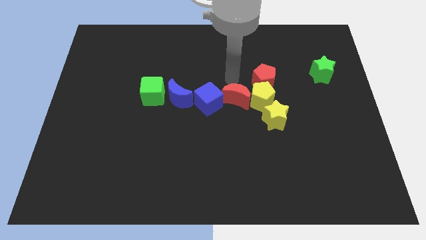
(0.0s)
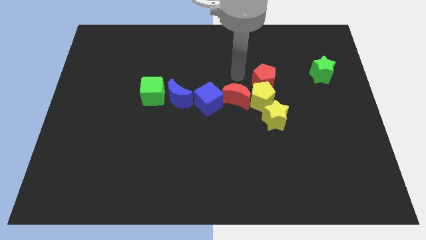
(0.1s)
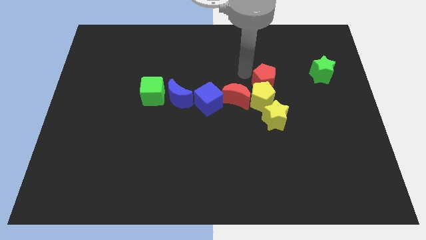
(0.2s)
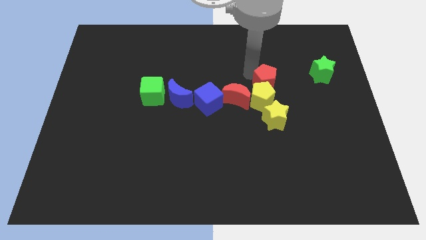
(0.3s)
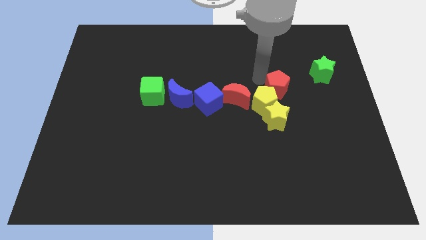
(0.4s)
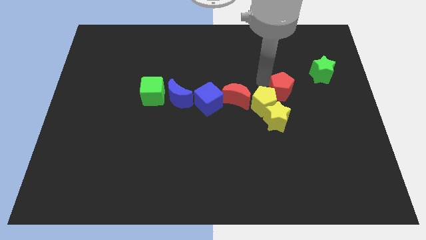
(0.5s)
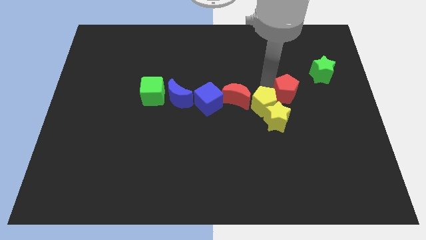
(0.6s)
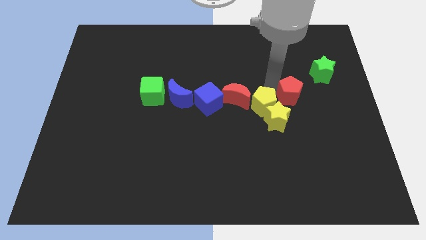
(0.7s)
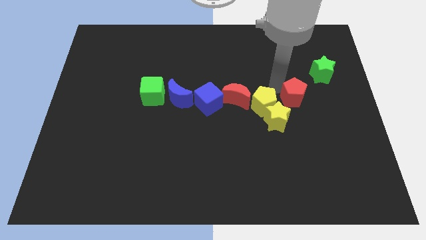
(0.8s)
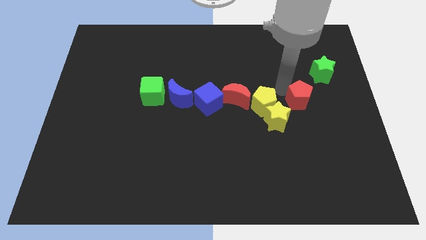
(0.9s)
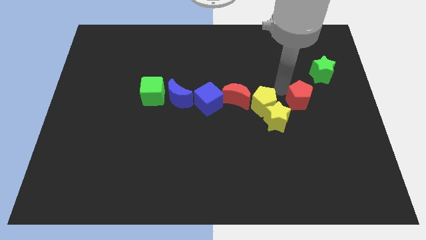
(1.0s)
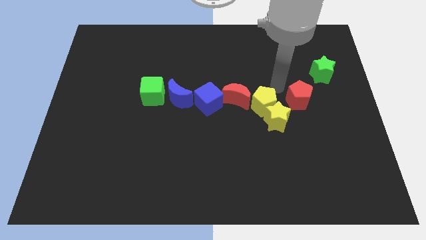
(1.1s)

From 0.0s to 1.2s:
place the red pentagon in between the green star and yellow star

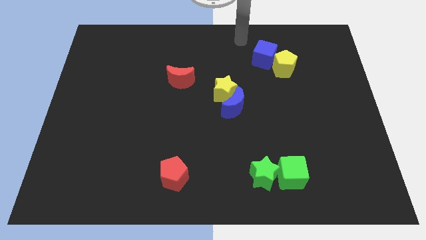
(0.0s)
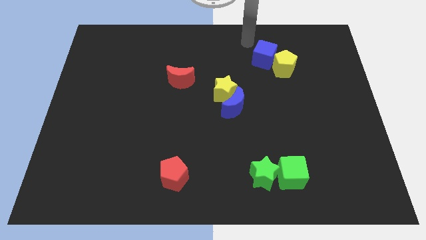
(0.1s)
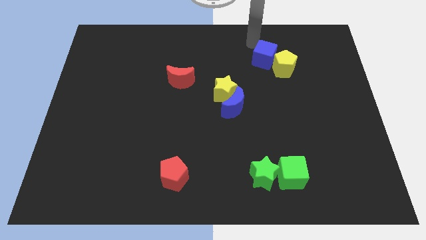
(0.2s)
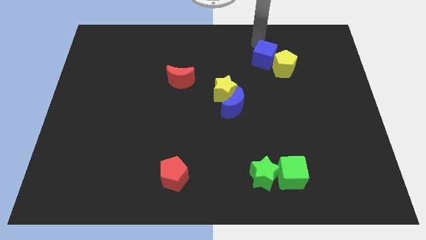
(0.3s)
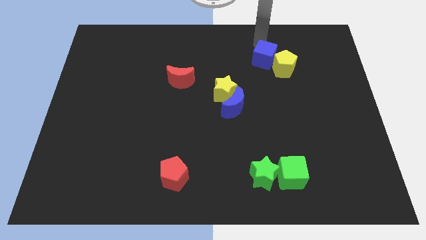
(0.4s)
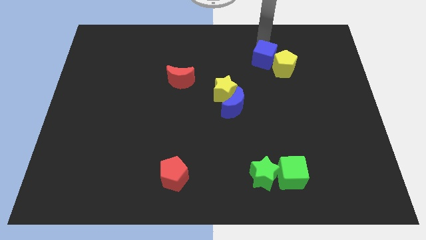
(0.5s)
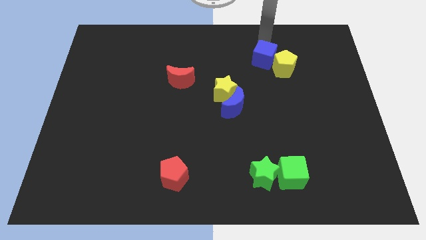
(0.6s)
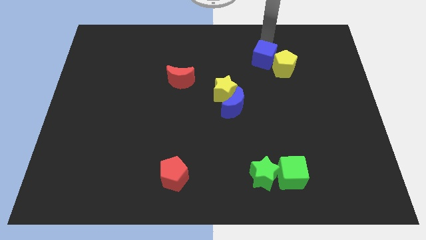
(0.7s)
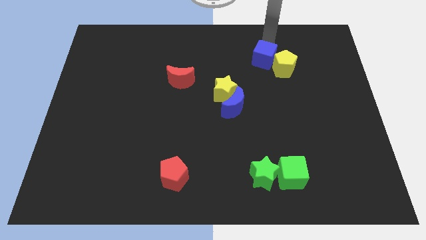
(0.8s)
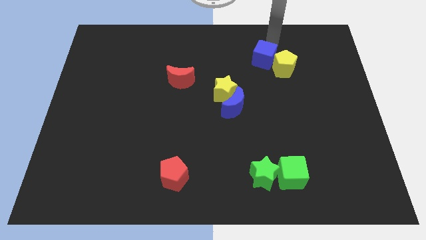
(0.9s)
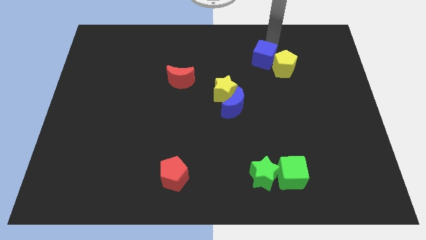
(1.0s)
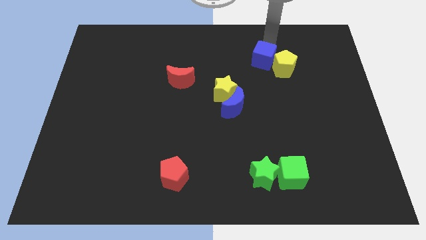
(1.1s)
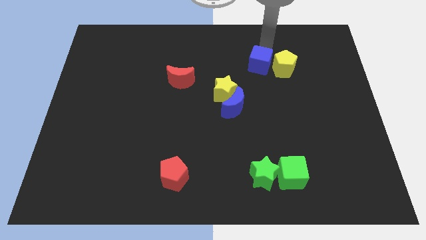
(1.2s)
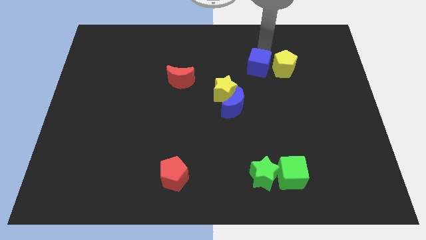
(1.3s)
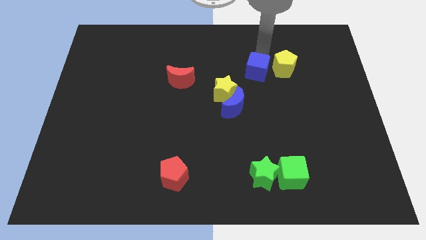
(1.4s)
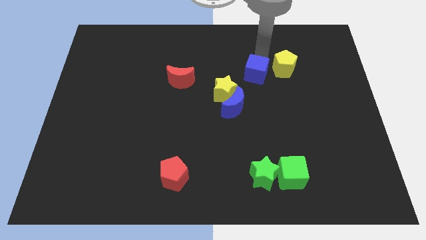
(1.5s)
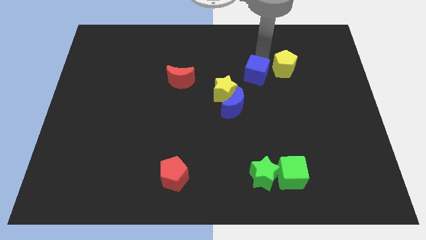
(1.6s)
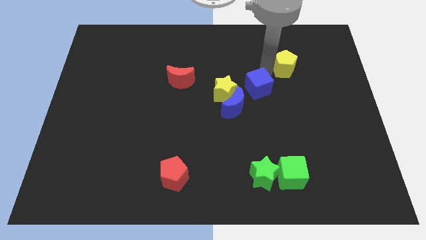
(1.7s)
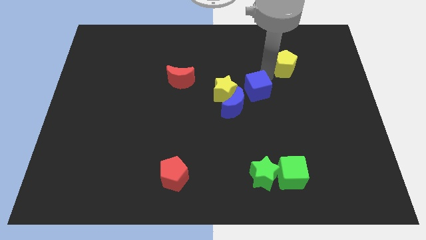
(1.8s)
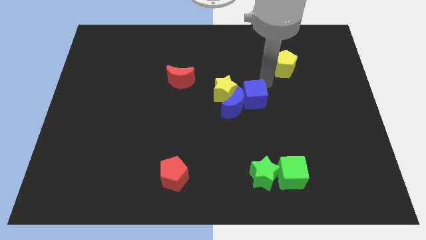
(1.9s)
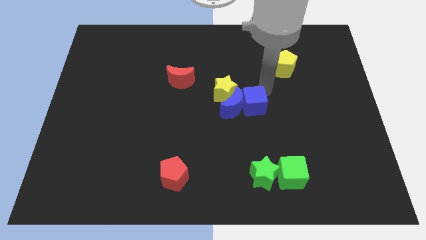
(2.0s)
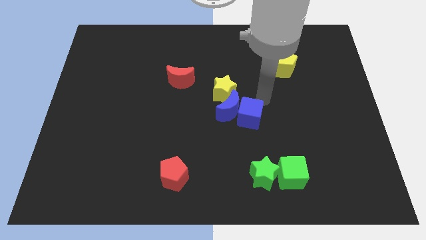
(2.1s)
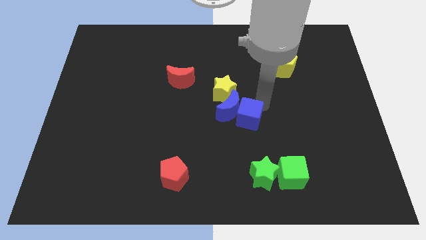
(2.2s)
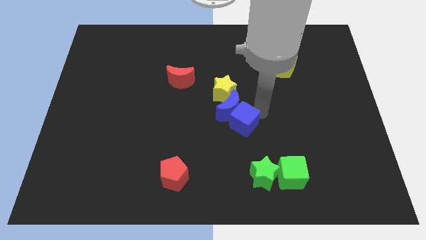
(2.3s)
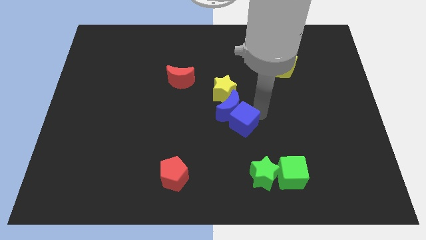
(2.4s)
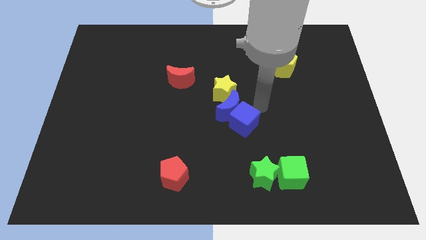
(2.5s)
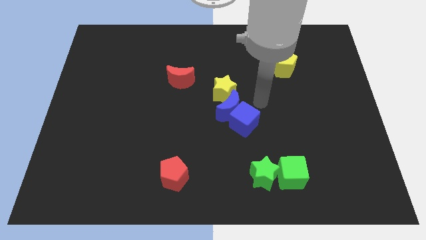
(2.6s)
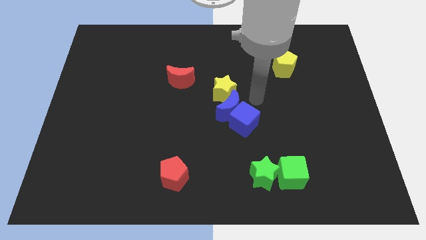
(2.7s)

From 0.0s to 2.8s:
move the blue cube to the bottom right of the blue crescent

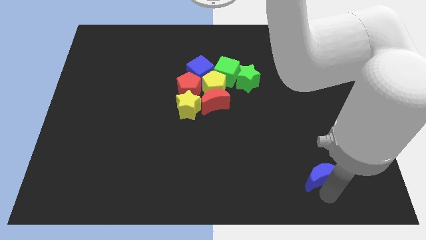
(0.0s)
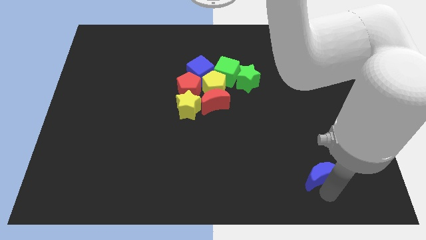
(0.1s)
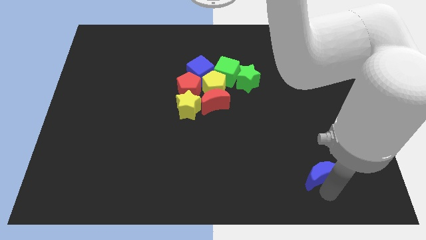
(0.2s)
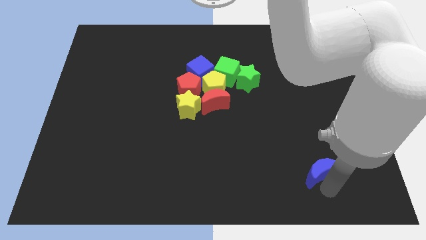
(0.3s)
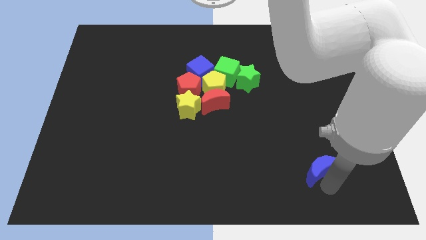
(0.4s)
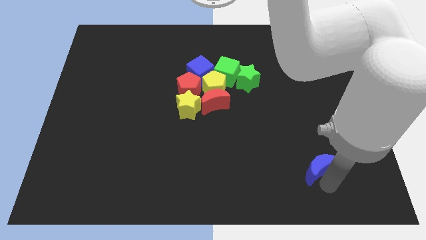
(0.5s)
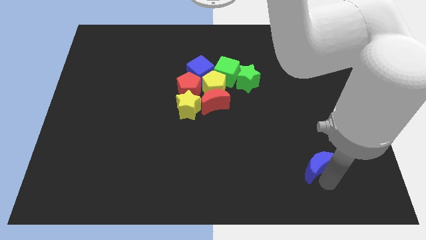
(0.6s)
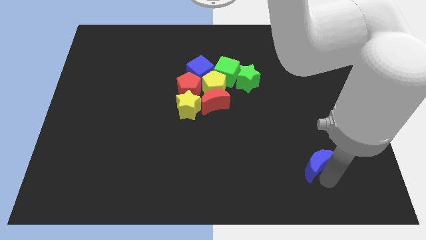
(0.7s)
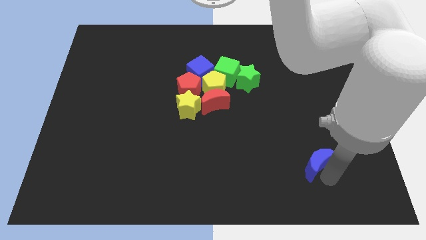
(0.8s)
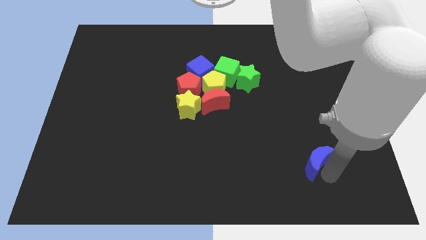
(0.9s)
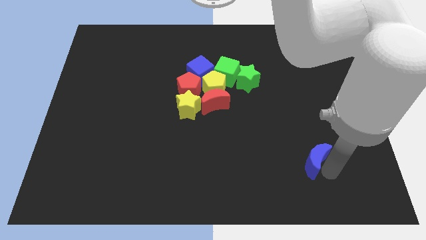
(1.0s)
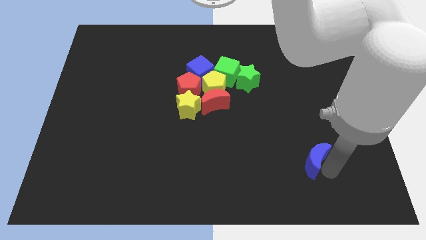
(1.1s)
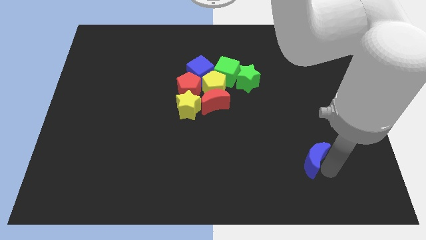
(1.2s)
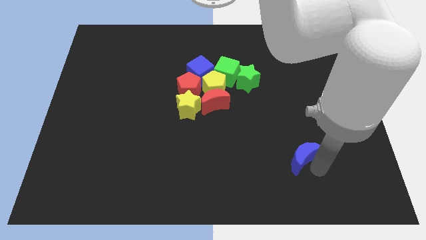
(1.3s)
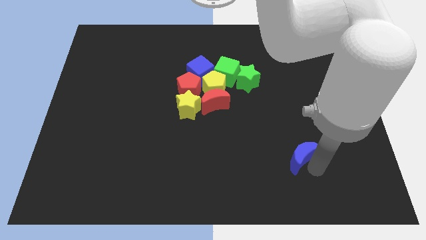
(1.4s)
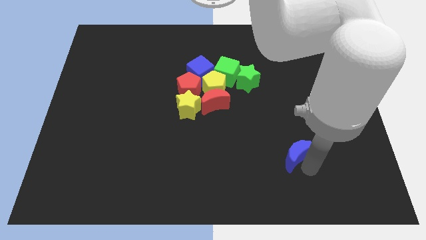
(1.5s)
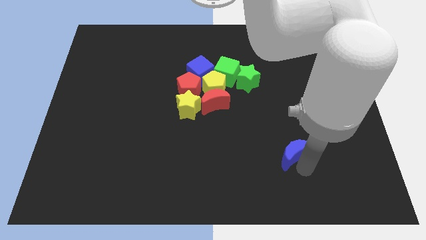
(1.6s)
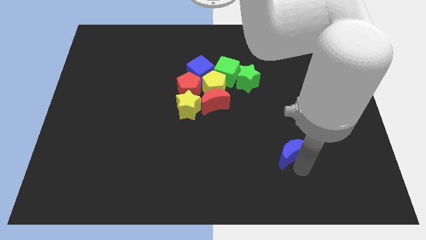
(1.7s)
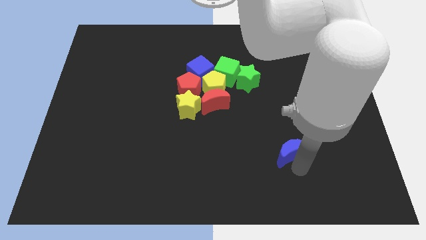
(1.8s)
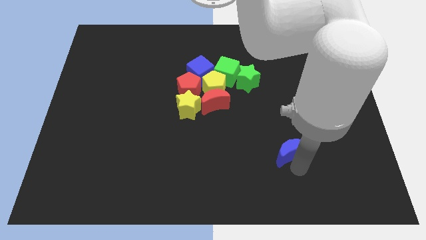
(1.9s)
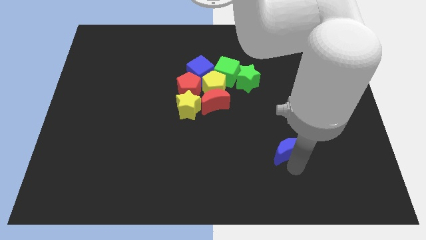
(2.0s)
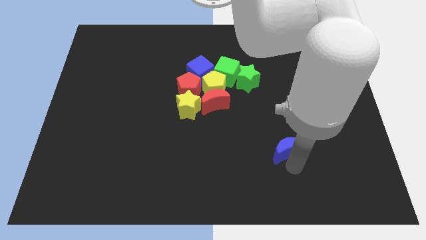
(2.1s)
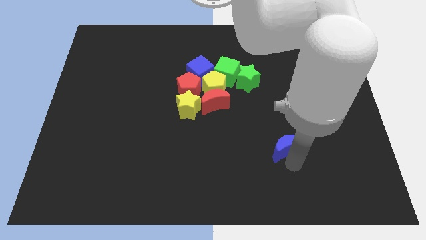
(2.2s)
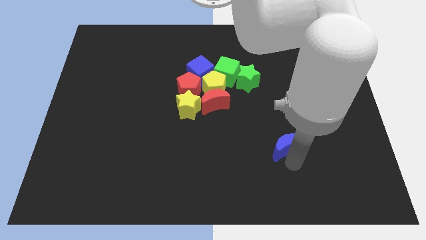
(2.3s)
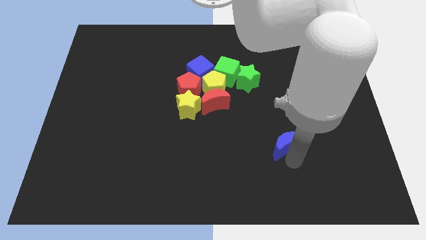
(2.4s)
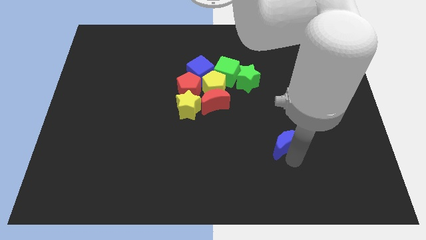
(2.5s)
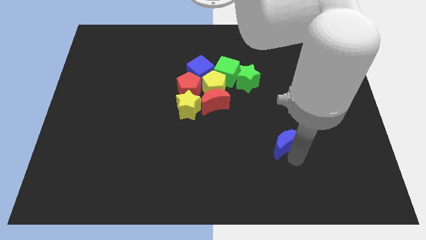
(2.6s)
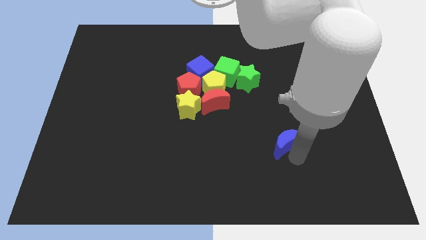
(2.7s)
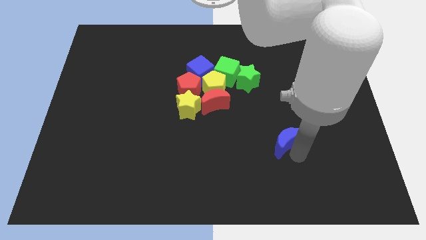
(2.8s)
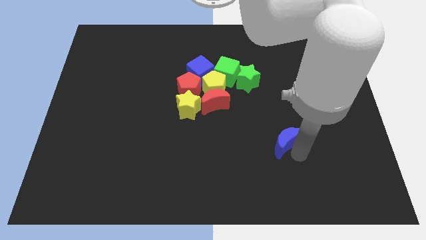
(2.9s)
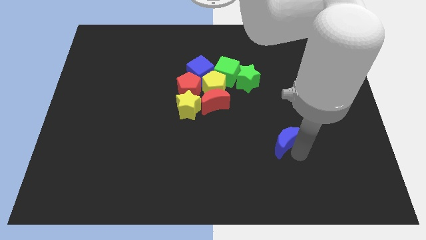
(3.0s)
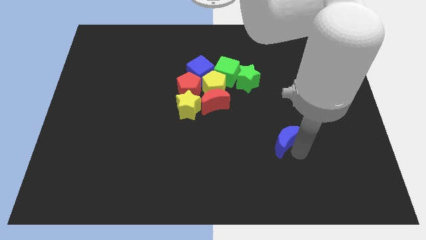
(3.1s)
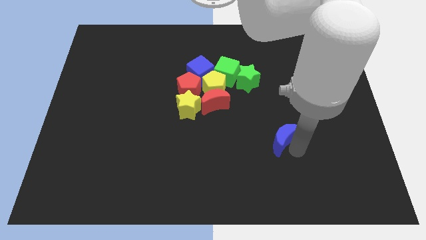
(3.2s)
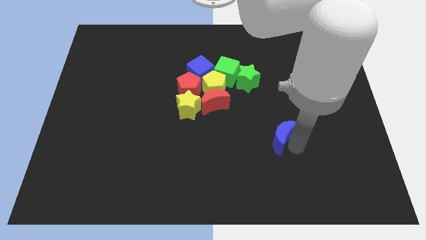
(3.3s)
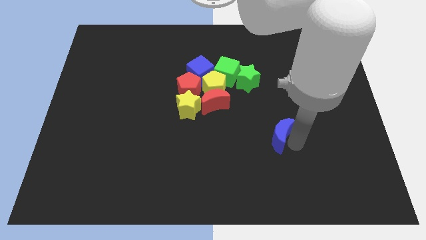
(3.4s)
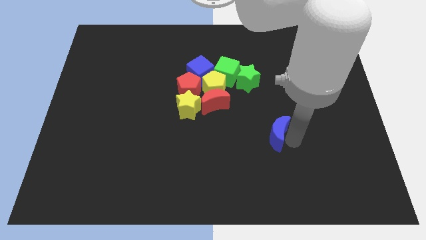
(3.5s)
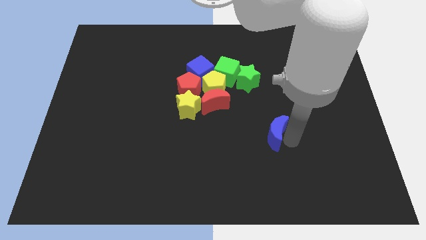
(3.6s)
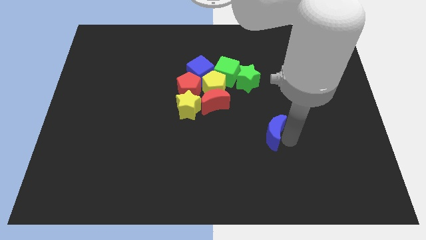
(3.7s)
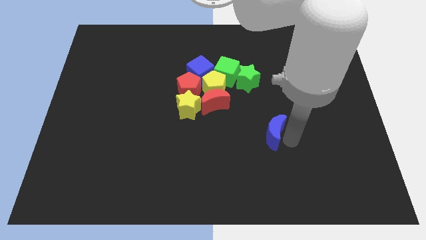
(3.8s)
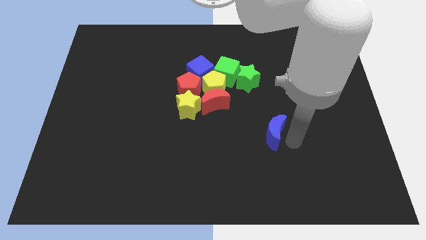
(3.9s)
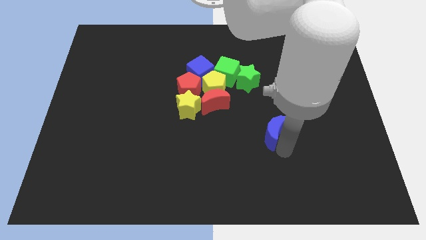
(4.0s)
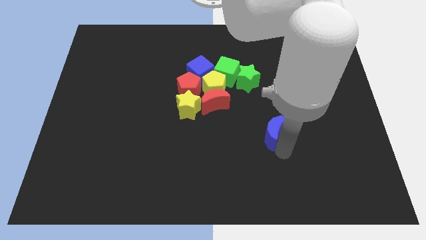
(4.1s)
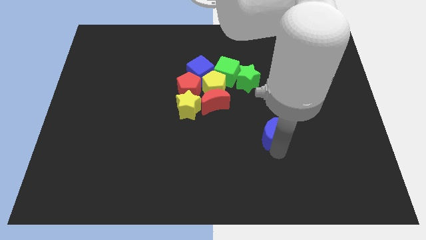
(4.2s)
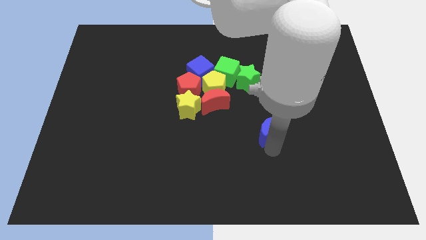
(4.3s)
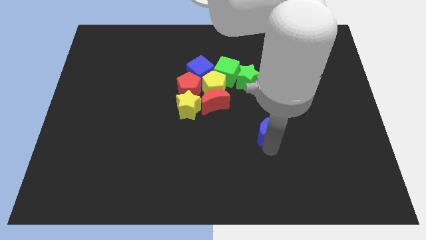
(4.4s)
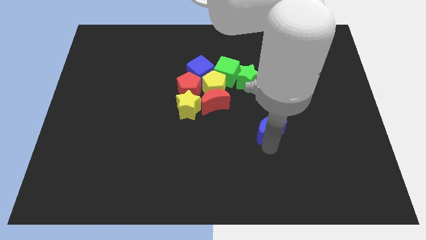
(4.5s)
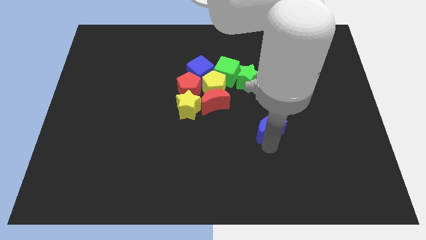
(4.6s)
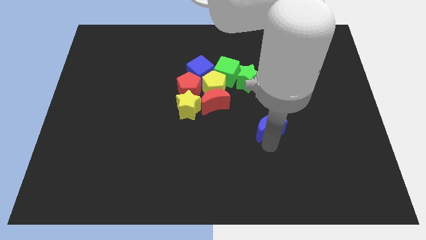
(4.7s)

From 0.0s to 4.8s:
push the blue crescent to the center of the board

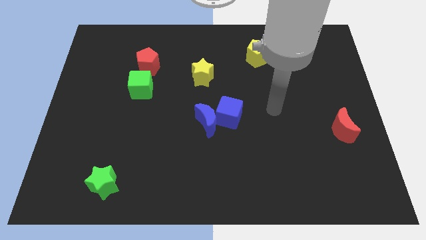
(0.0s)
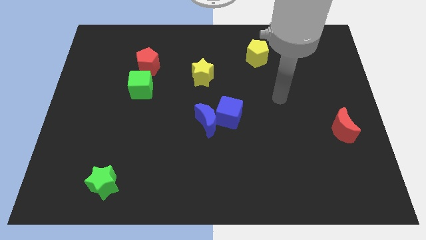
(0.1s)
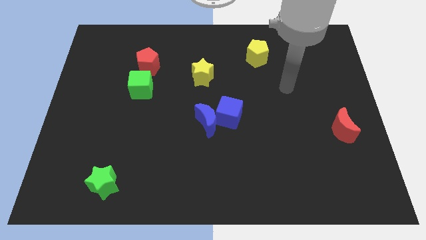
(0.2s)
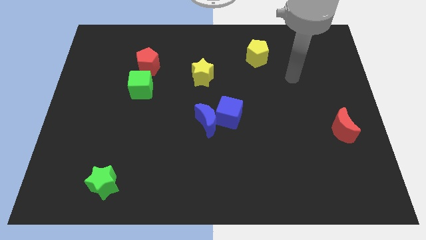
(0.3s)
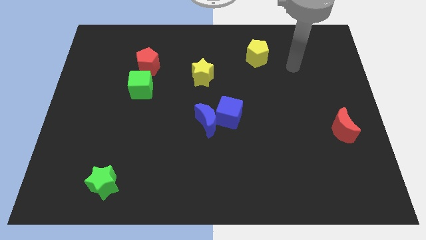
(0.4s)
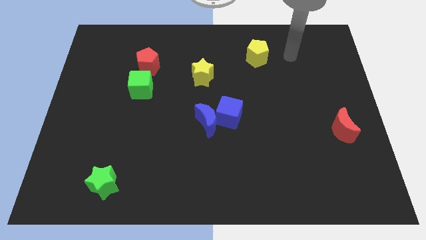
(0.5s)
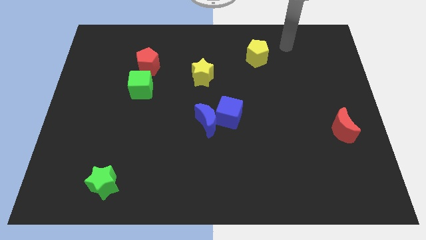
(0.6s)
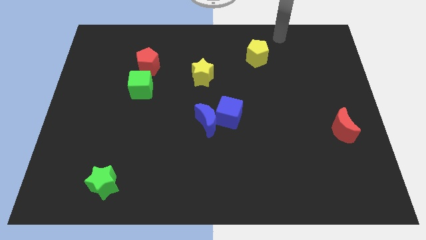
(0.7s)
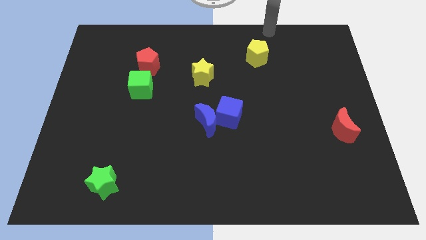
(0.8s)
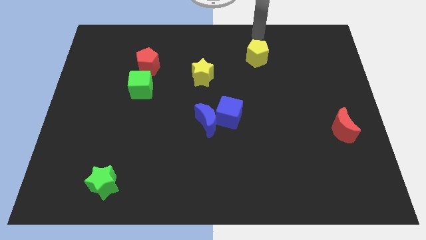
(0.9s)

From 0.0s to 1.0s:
move your arm towards the top side of the board
